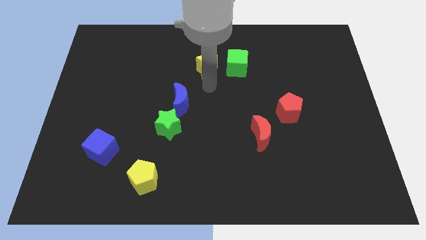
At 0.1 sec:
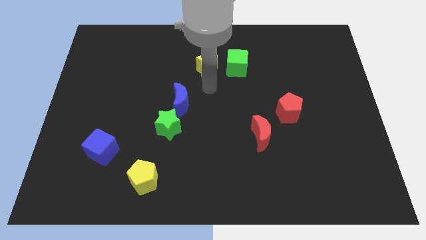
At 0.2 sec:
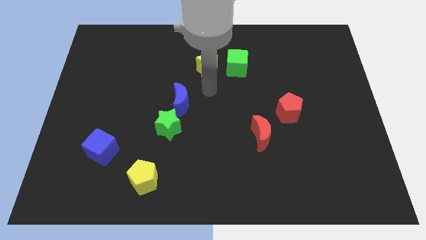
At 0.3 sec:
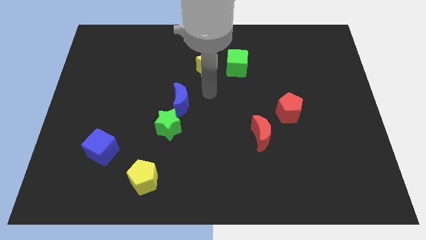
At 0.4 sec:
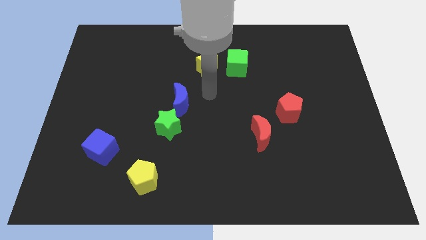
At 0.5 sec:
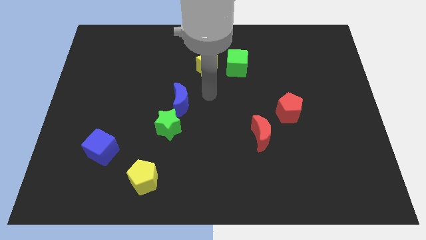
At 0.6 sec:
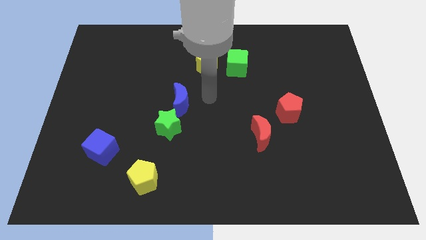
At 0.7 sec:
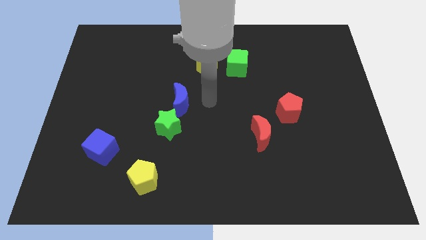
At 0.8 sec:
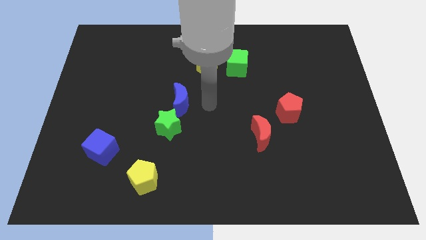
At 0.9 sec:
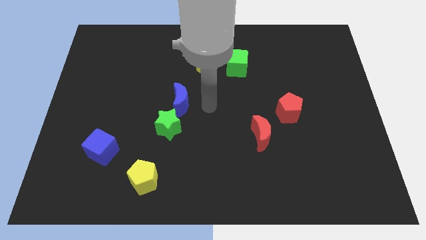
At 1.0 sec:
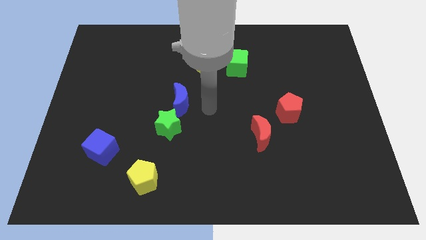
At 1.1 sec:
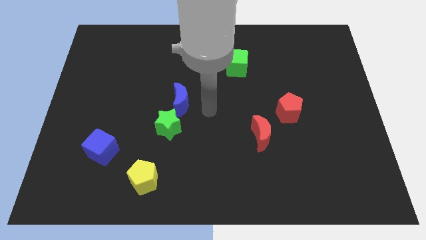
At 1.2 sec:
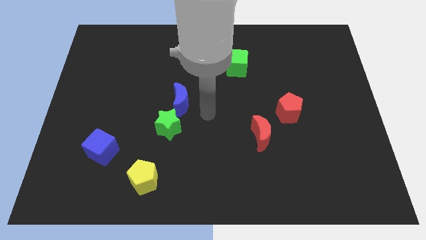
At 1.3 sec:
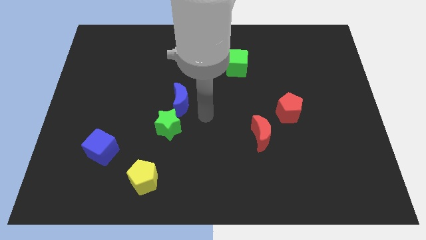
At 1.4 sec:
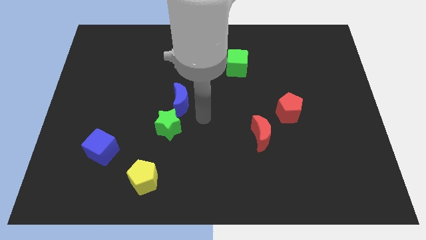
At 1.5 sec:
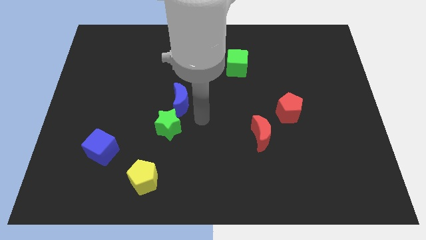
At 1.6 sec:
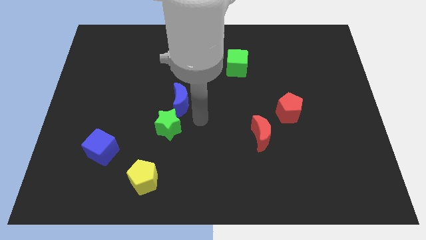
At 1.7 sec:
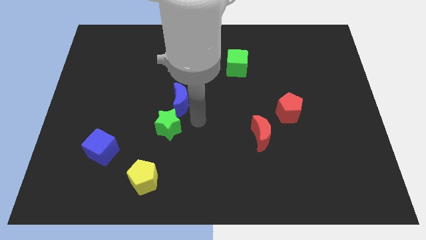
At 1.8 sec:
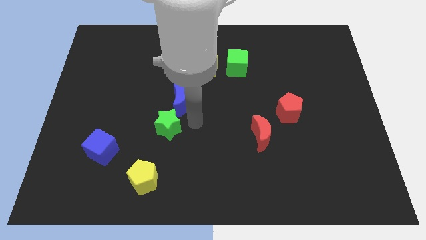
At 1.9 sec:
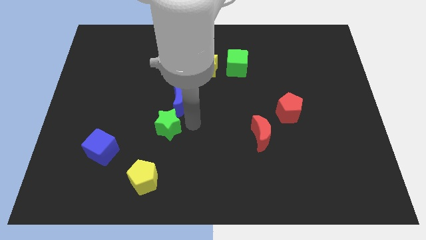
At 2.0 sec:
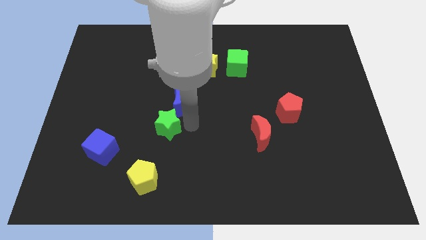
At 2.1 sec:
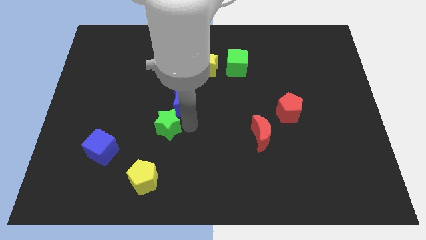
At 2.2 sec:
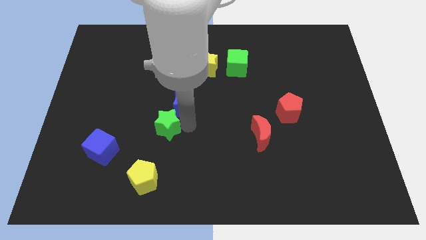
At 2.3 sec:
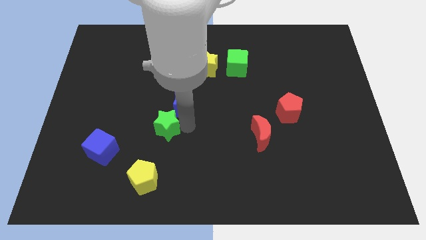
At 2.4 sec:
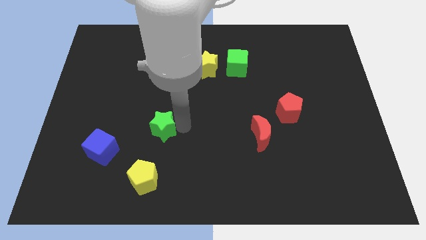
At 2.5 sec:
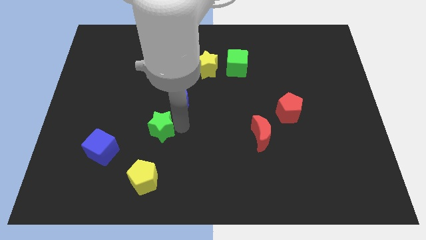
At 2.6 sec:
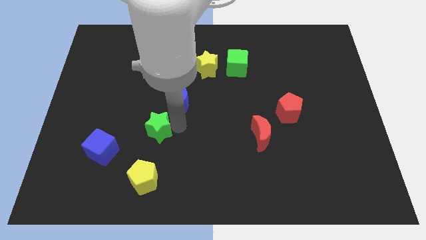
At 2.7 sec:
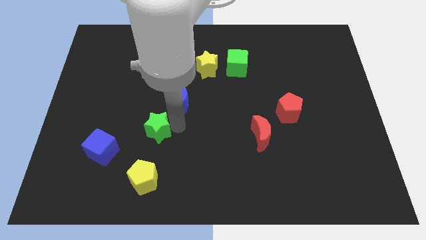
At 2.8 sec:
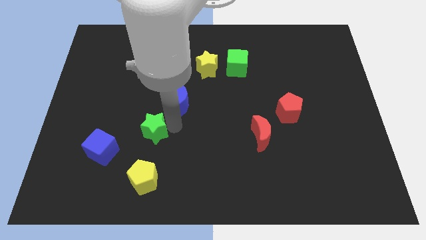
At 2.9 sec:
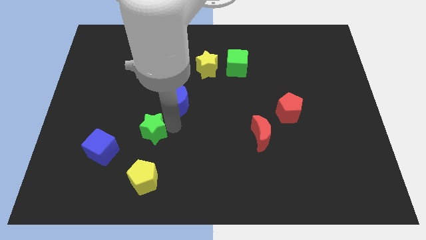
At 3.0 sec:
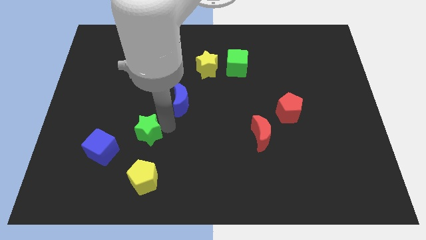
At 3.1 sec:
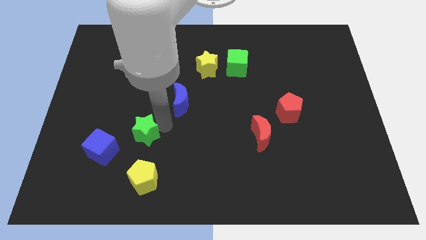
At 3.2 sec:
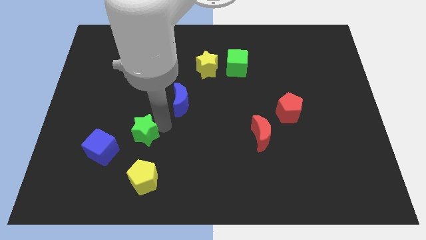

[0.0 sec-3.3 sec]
push the green star to the top of the yellow pentagon

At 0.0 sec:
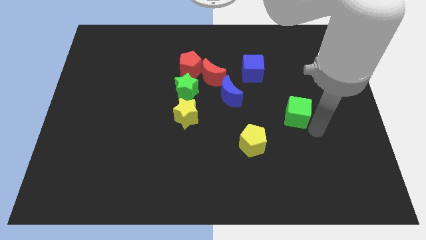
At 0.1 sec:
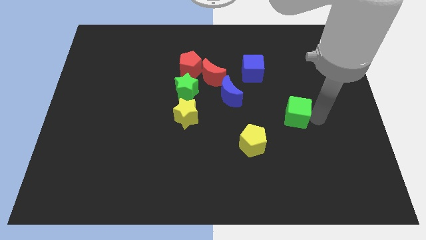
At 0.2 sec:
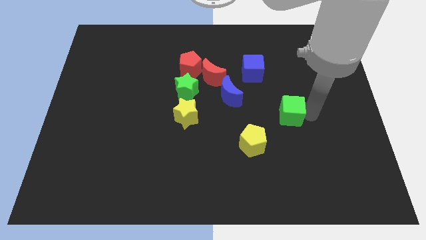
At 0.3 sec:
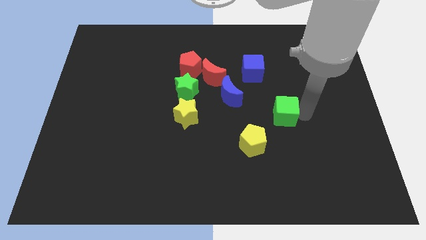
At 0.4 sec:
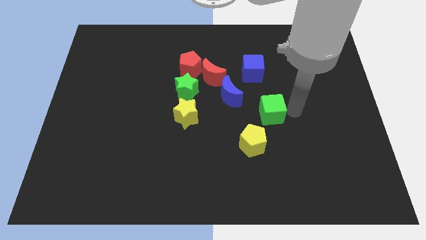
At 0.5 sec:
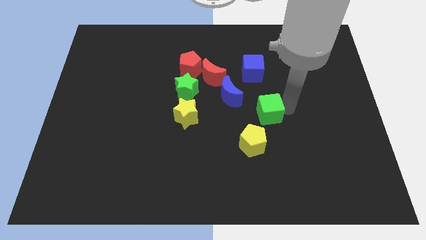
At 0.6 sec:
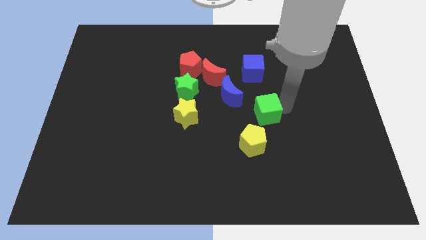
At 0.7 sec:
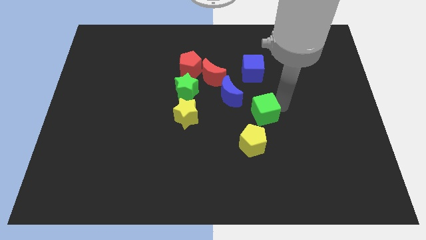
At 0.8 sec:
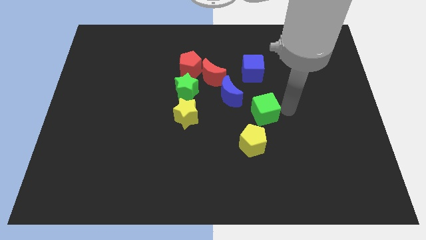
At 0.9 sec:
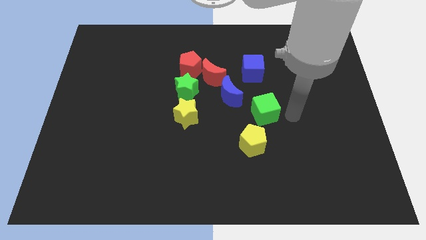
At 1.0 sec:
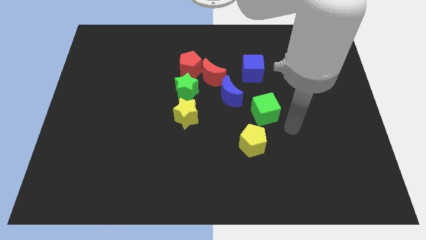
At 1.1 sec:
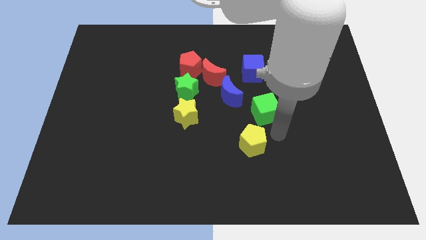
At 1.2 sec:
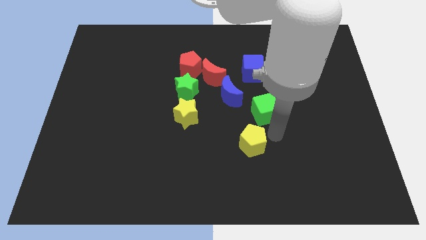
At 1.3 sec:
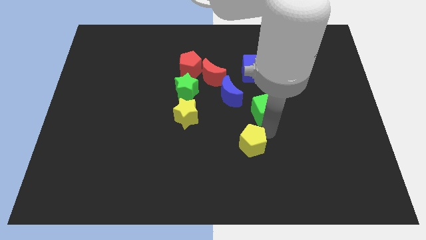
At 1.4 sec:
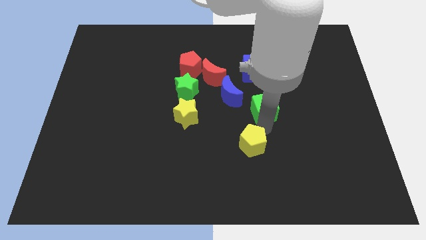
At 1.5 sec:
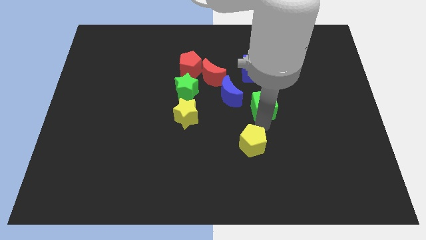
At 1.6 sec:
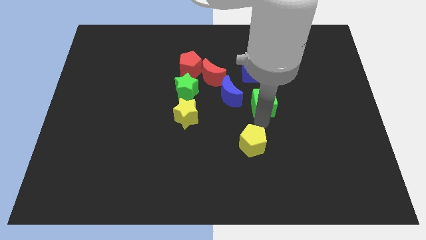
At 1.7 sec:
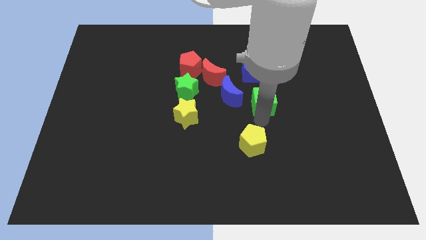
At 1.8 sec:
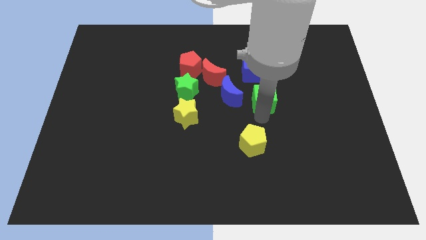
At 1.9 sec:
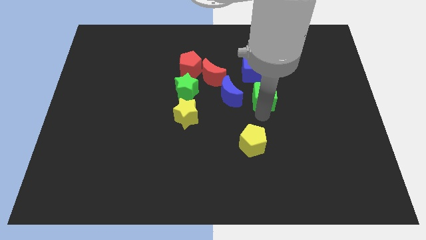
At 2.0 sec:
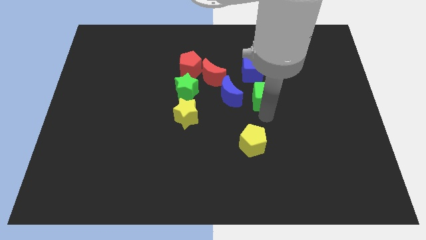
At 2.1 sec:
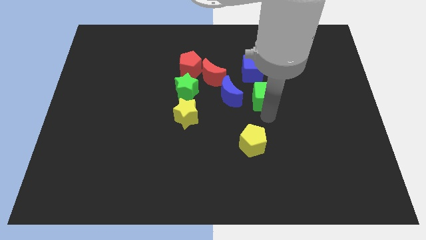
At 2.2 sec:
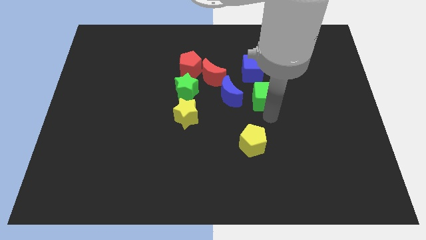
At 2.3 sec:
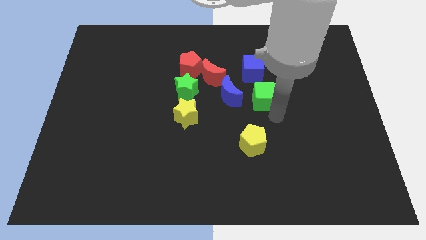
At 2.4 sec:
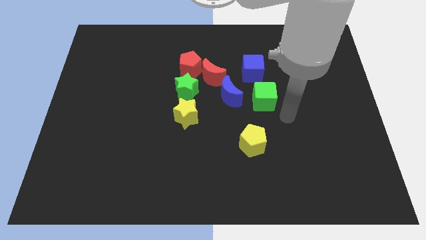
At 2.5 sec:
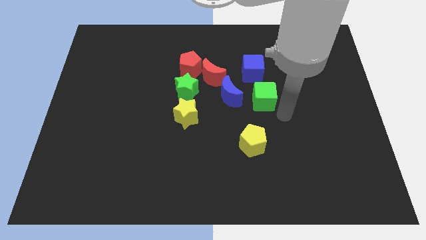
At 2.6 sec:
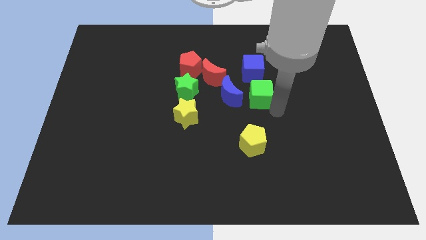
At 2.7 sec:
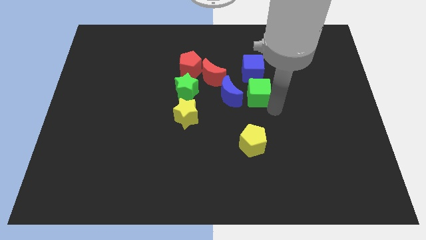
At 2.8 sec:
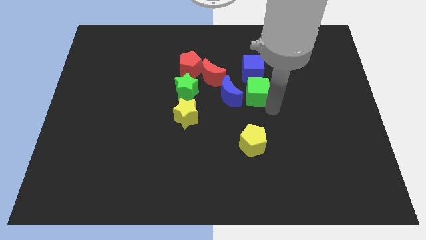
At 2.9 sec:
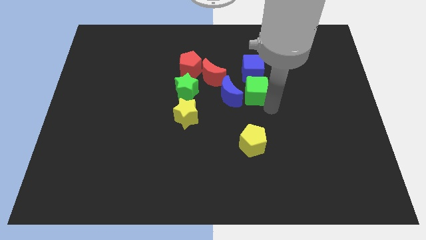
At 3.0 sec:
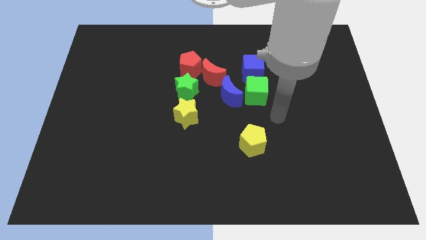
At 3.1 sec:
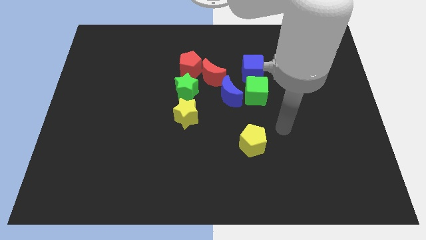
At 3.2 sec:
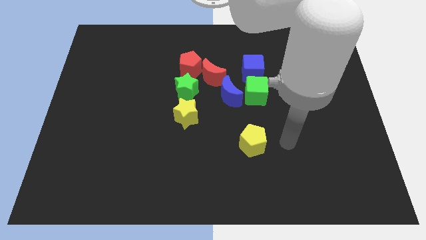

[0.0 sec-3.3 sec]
move the green cube to the bottom of the blue cube

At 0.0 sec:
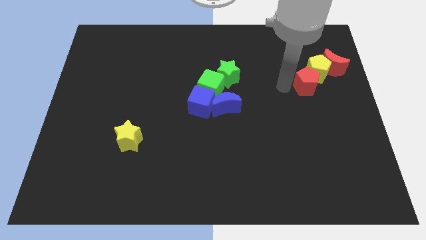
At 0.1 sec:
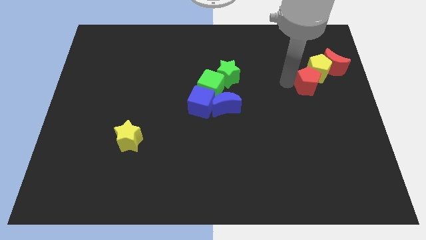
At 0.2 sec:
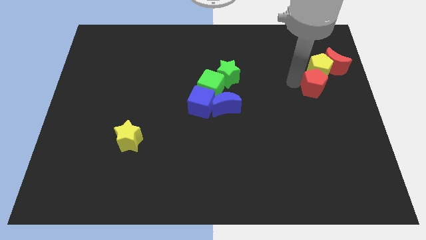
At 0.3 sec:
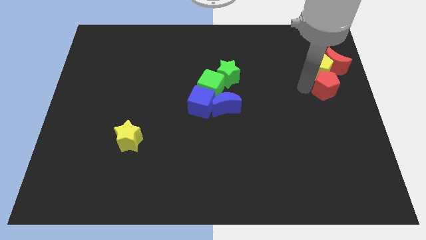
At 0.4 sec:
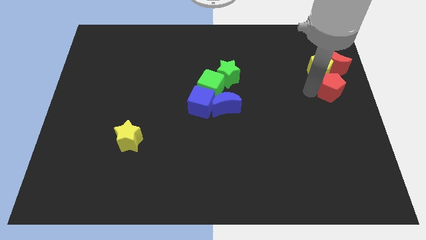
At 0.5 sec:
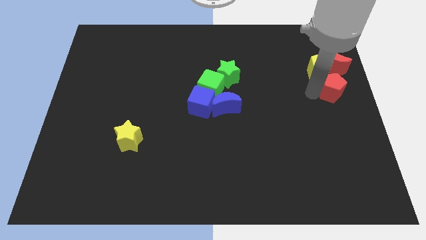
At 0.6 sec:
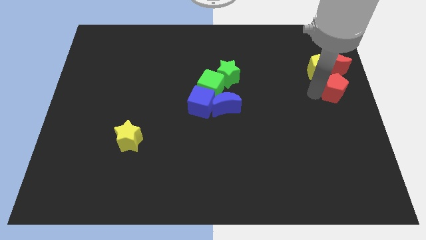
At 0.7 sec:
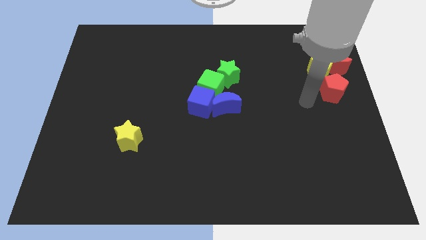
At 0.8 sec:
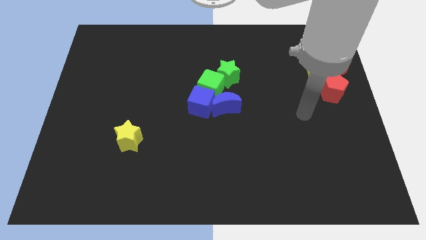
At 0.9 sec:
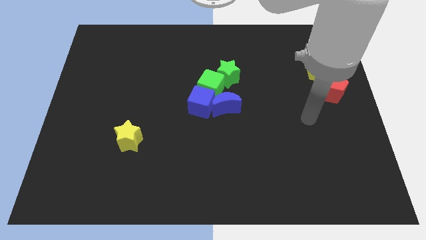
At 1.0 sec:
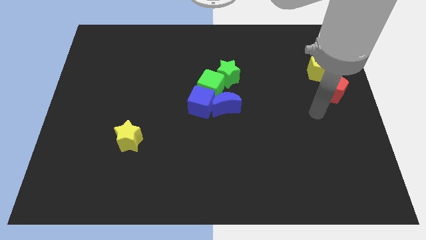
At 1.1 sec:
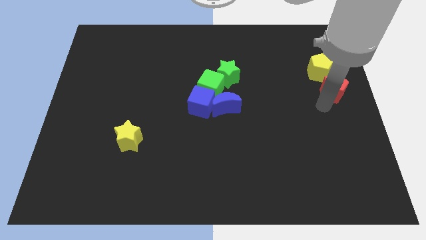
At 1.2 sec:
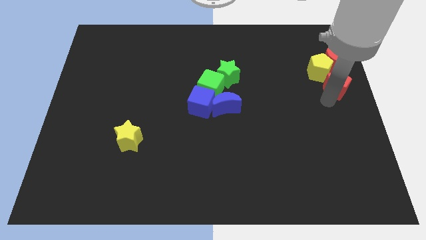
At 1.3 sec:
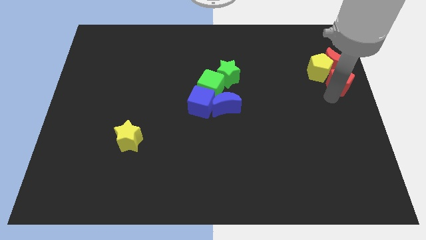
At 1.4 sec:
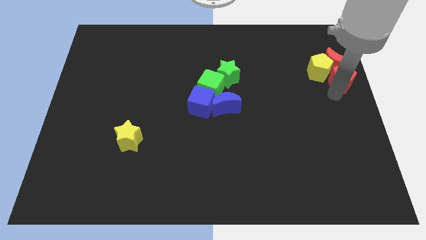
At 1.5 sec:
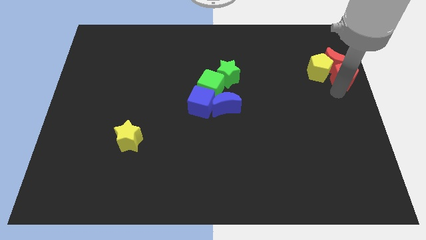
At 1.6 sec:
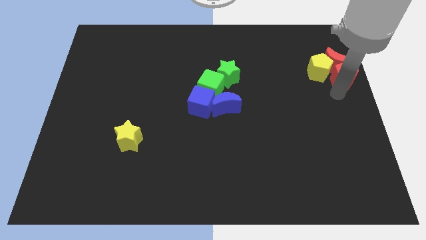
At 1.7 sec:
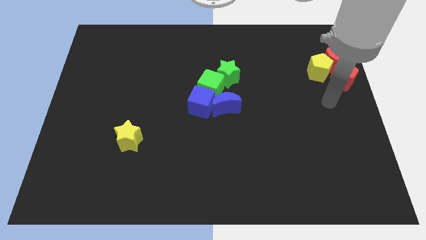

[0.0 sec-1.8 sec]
place the red pentagon under the red crescent

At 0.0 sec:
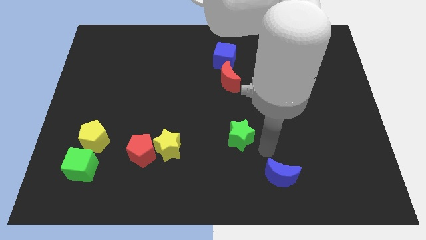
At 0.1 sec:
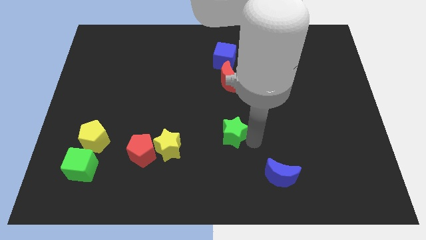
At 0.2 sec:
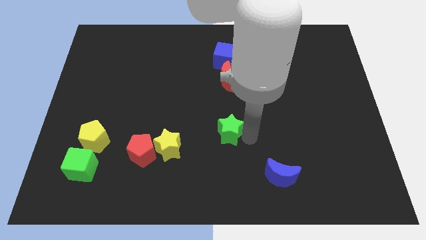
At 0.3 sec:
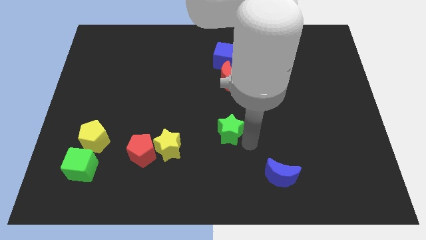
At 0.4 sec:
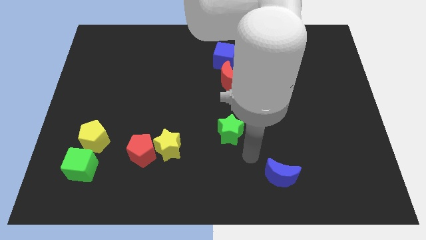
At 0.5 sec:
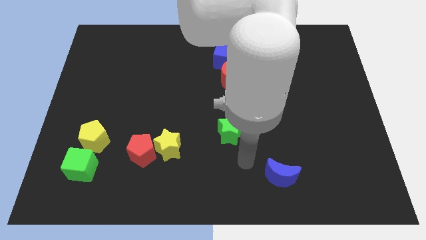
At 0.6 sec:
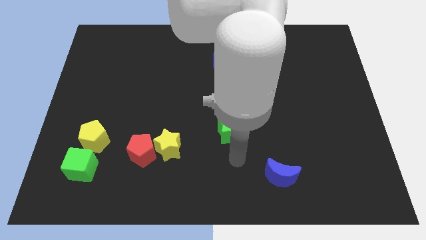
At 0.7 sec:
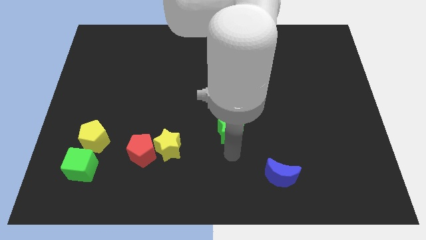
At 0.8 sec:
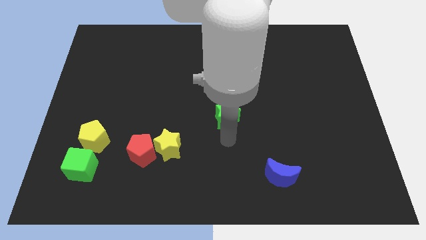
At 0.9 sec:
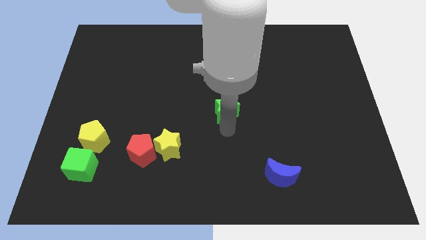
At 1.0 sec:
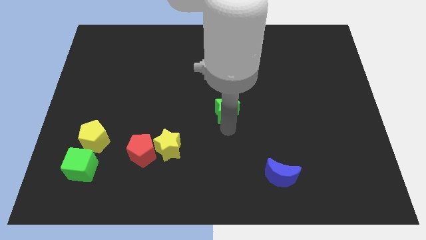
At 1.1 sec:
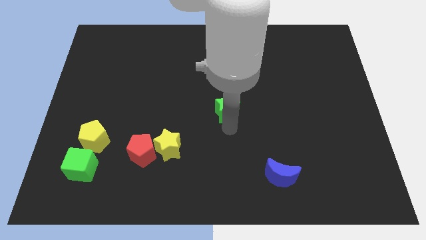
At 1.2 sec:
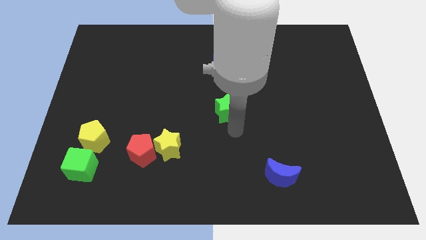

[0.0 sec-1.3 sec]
place the green star below the red crescent to form a vertical line
